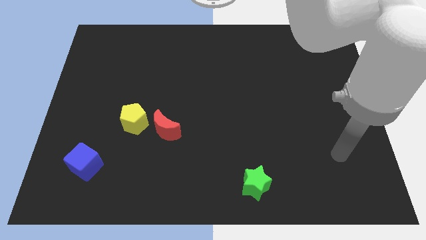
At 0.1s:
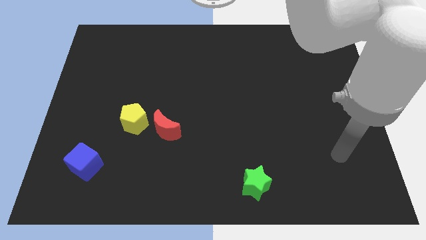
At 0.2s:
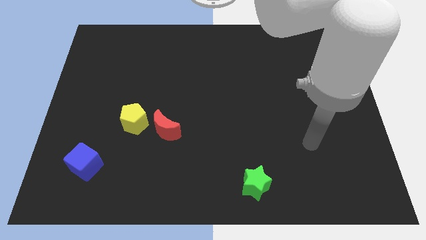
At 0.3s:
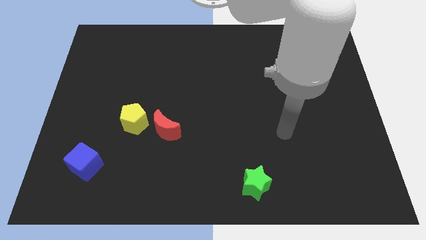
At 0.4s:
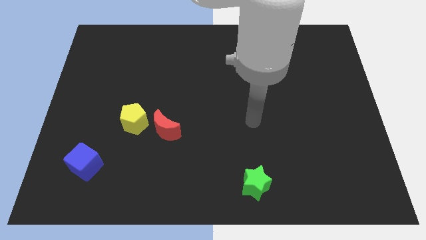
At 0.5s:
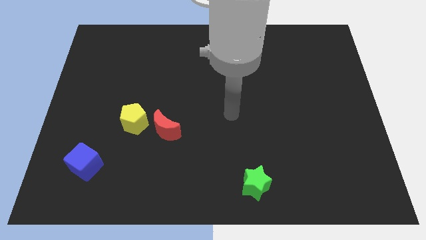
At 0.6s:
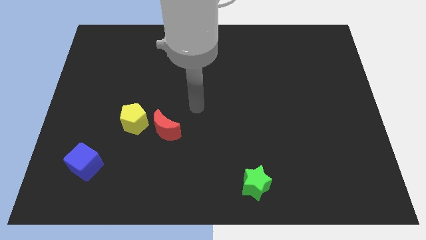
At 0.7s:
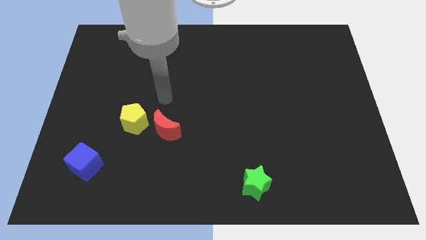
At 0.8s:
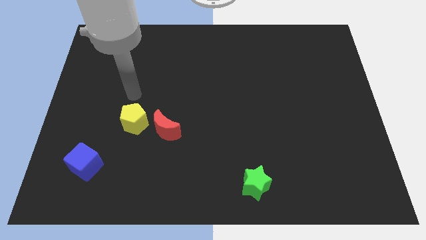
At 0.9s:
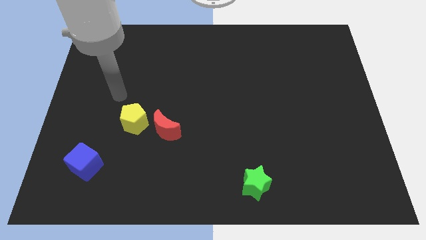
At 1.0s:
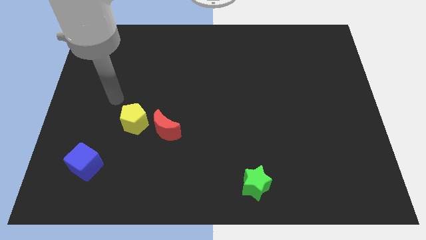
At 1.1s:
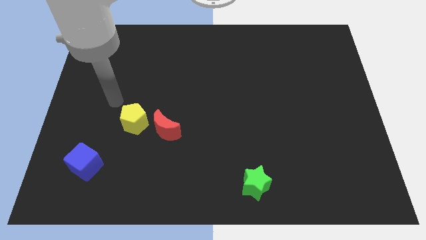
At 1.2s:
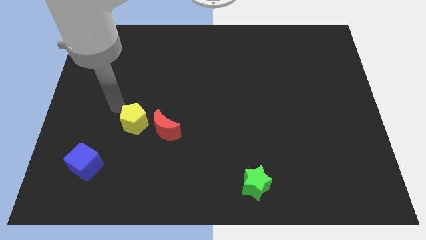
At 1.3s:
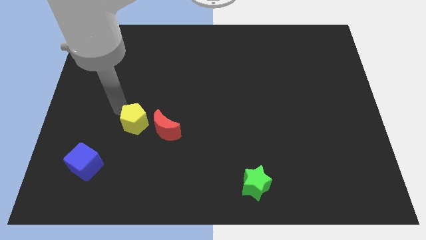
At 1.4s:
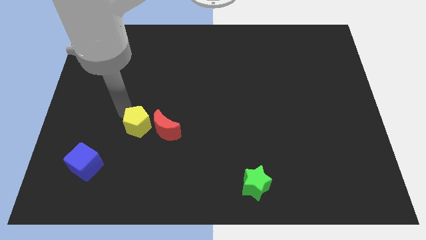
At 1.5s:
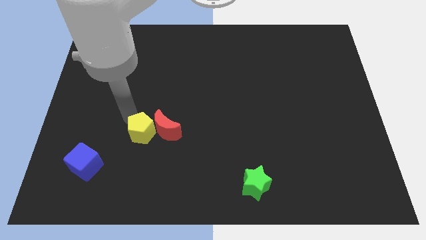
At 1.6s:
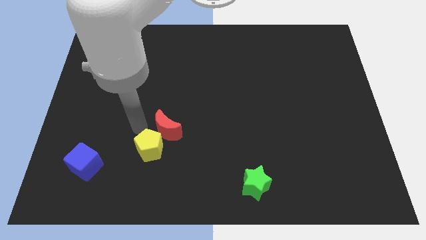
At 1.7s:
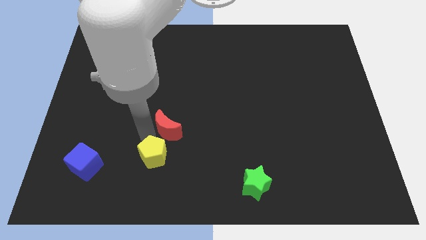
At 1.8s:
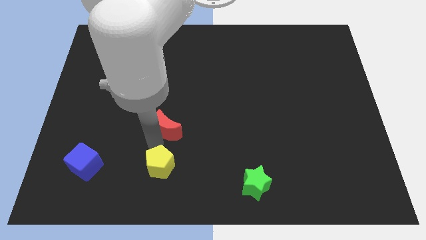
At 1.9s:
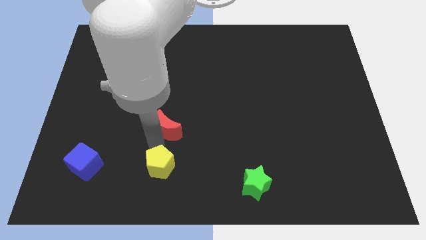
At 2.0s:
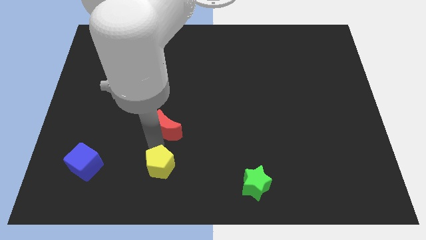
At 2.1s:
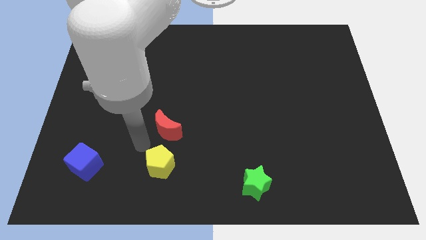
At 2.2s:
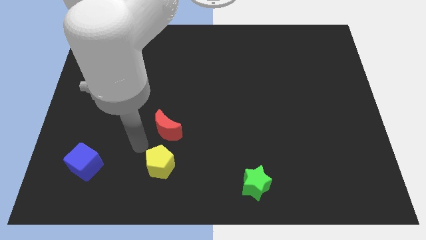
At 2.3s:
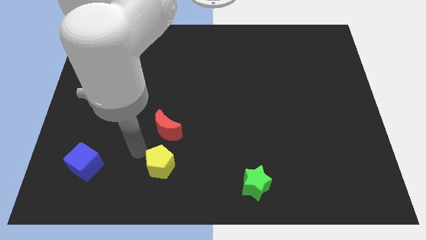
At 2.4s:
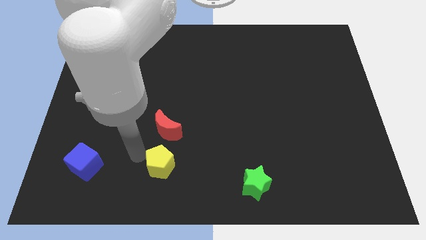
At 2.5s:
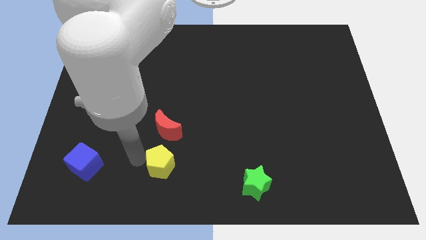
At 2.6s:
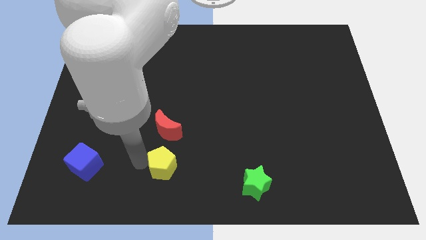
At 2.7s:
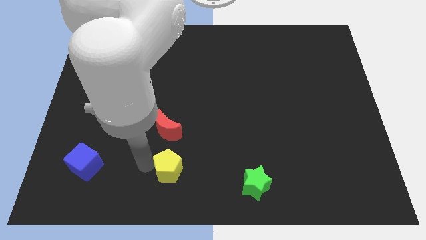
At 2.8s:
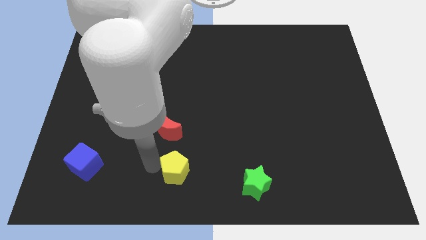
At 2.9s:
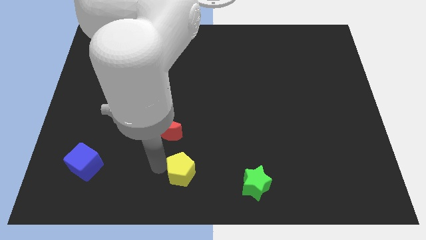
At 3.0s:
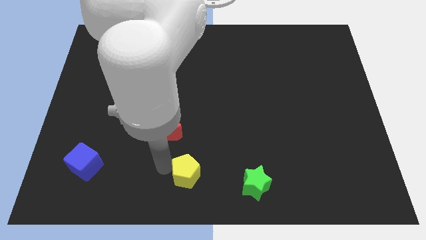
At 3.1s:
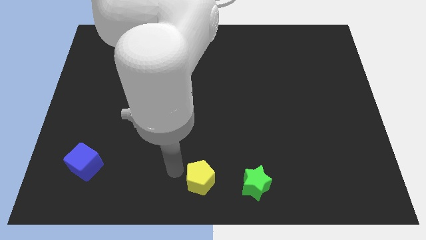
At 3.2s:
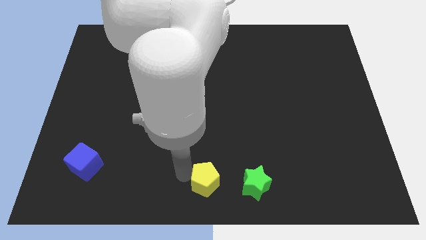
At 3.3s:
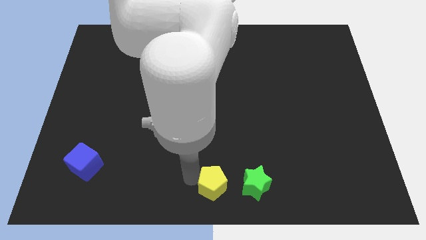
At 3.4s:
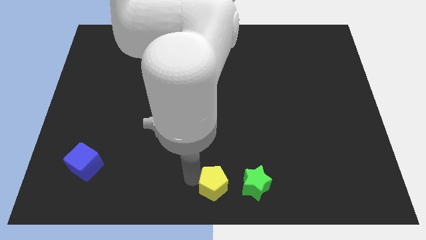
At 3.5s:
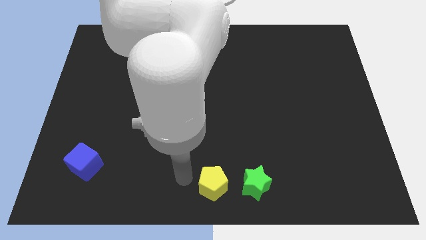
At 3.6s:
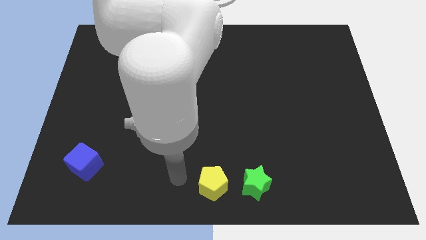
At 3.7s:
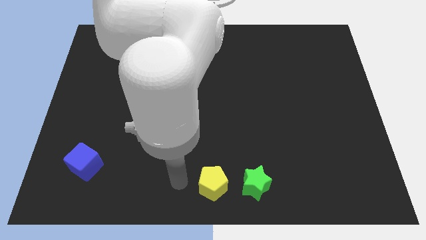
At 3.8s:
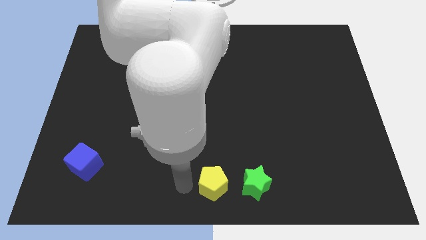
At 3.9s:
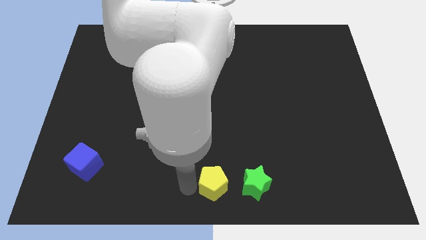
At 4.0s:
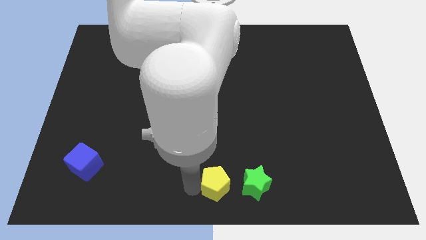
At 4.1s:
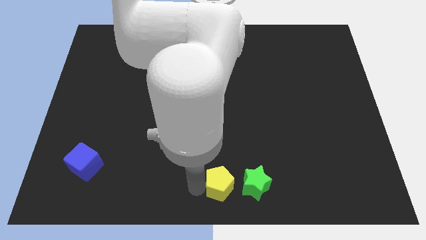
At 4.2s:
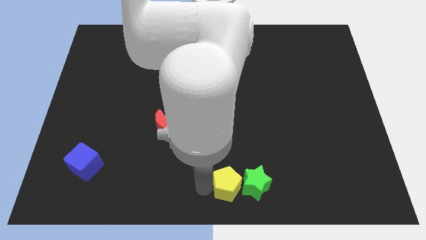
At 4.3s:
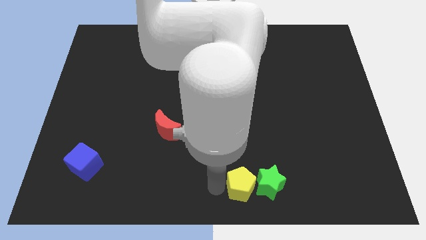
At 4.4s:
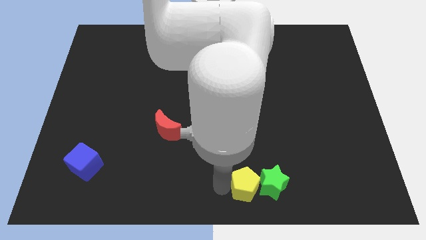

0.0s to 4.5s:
push the yellow pentagon to the green block

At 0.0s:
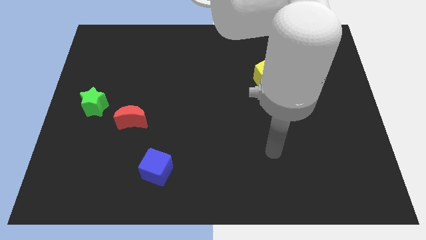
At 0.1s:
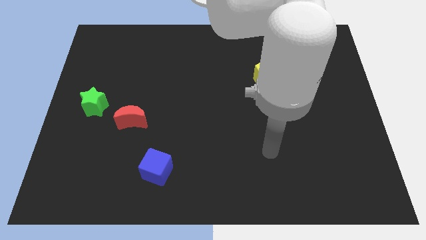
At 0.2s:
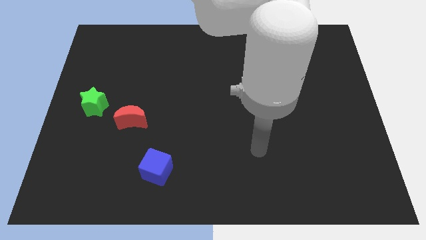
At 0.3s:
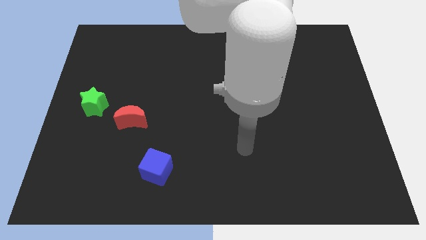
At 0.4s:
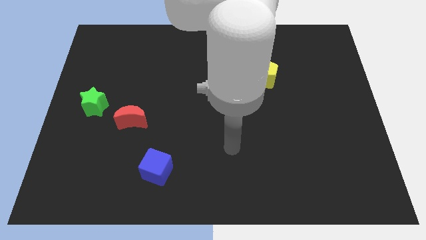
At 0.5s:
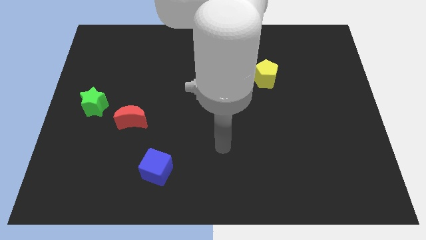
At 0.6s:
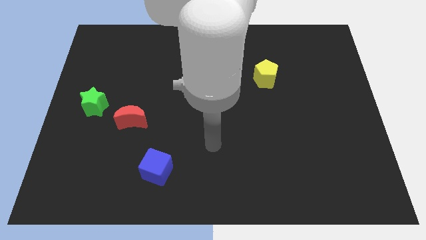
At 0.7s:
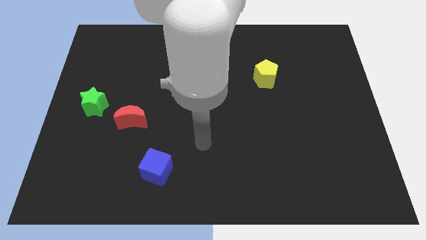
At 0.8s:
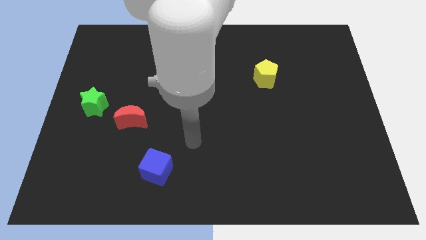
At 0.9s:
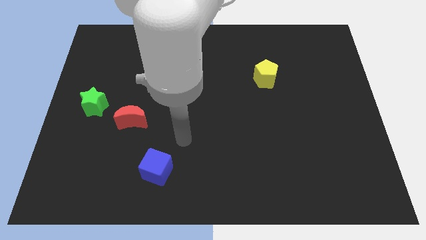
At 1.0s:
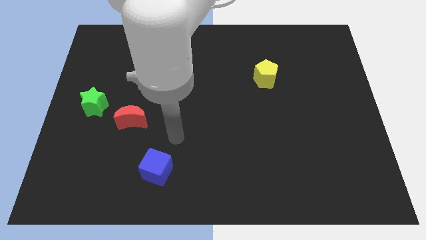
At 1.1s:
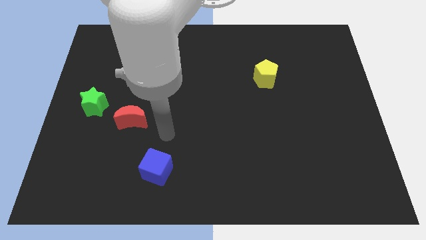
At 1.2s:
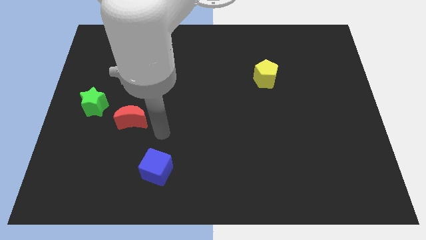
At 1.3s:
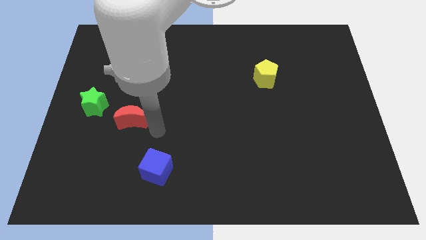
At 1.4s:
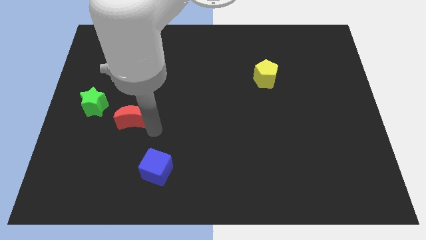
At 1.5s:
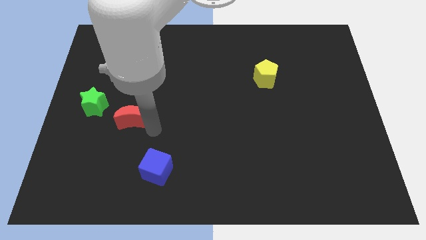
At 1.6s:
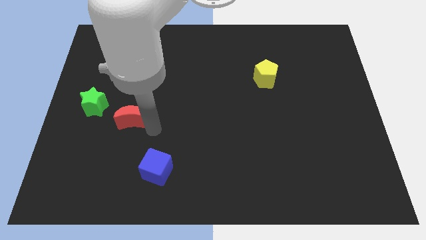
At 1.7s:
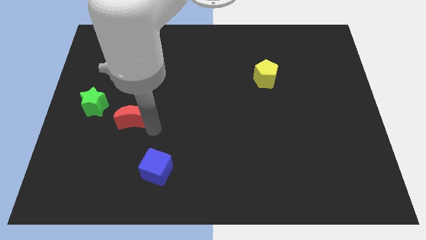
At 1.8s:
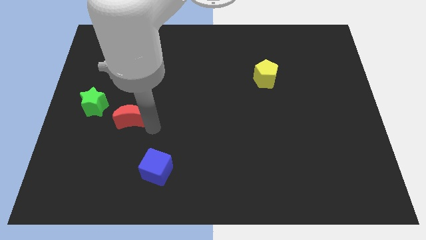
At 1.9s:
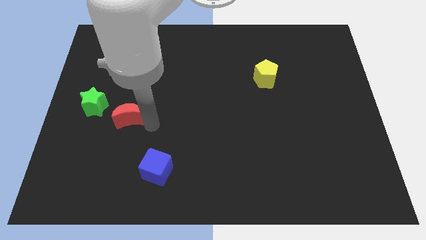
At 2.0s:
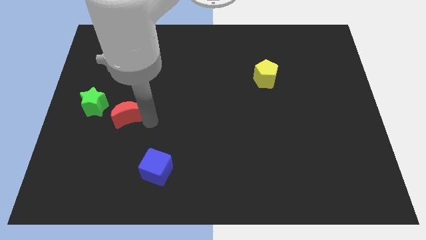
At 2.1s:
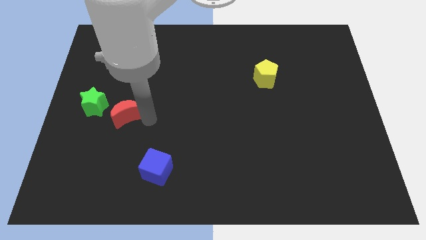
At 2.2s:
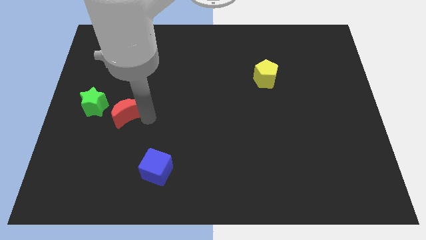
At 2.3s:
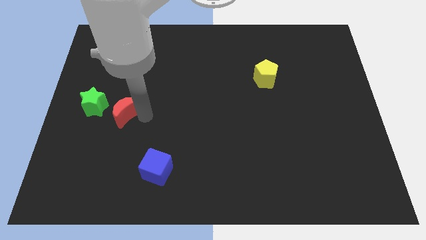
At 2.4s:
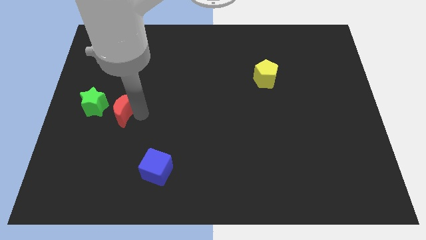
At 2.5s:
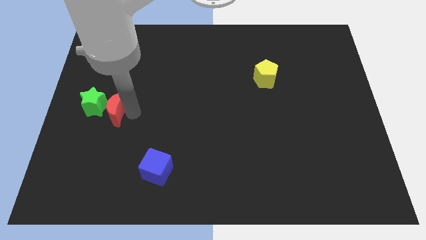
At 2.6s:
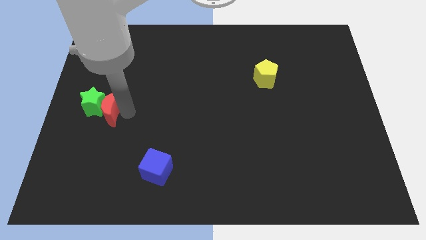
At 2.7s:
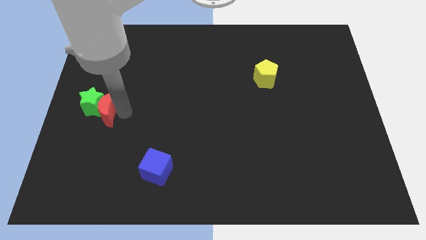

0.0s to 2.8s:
move the red moon to the star

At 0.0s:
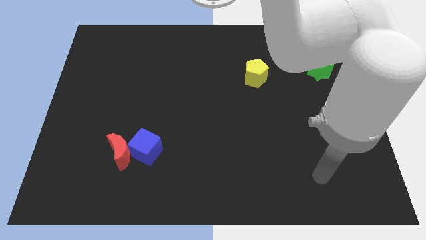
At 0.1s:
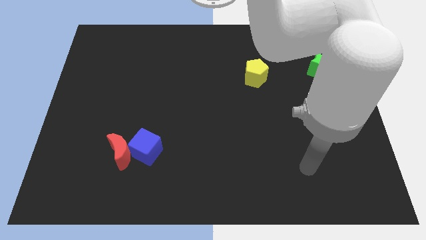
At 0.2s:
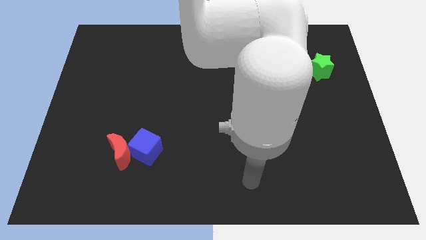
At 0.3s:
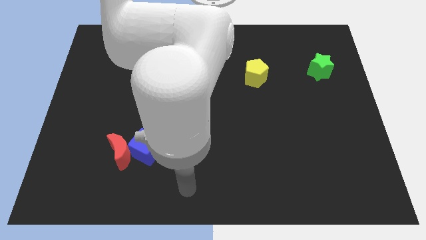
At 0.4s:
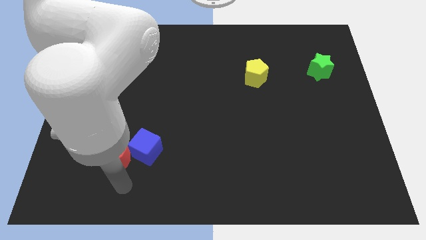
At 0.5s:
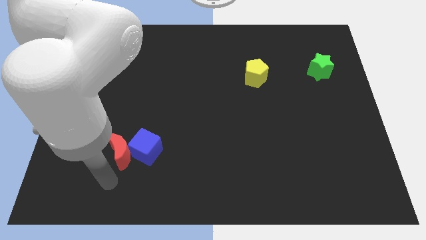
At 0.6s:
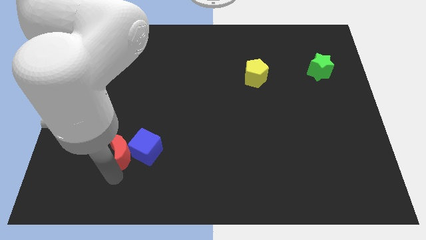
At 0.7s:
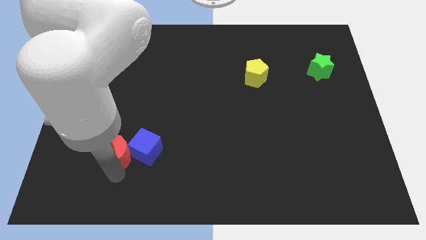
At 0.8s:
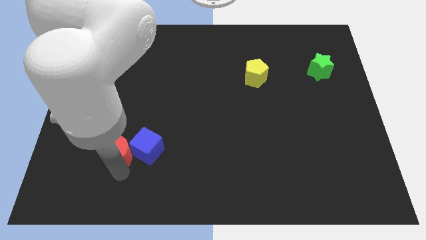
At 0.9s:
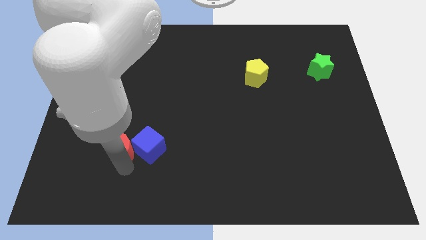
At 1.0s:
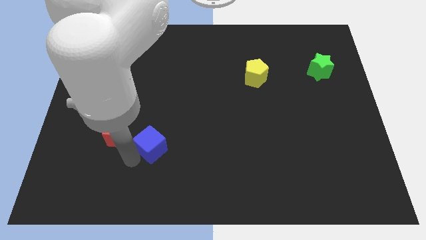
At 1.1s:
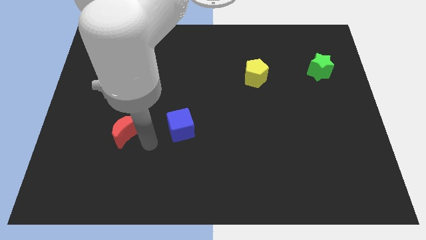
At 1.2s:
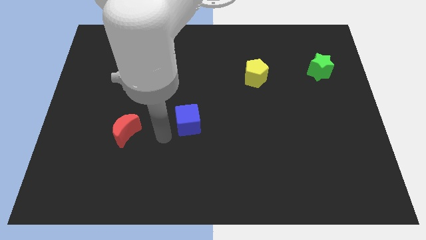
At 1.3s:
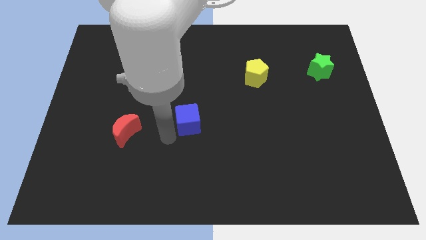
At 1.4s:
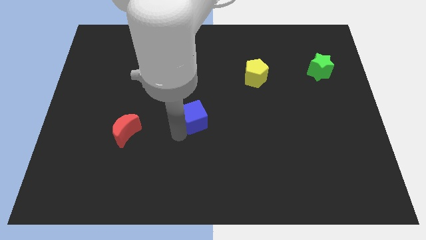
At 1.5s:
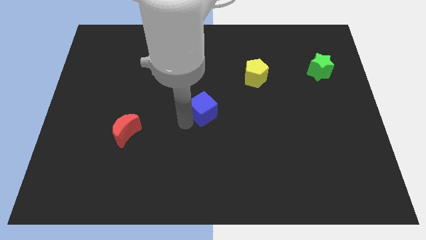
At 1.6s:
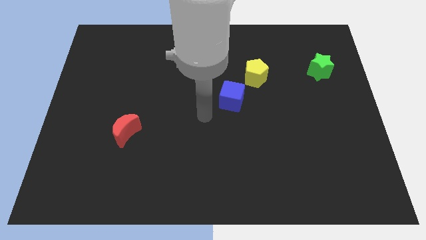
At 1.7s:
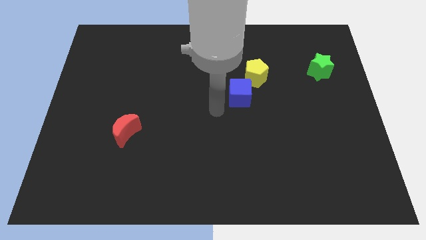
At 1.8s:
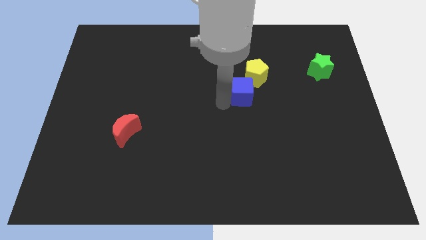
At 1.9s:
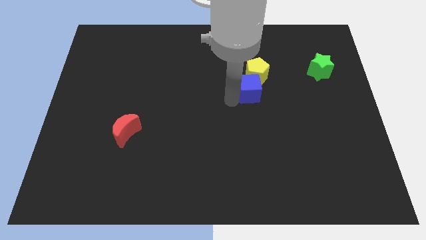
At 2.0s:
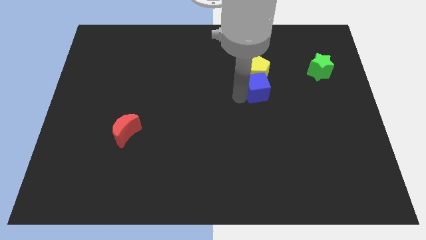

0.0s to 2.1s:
move the cube towards the yellow block
